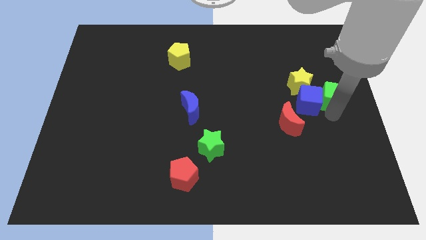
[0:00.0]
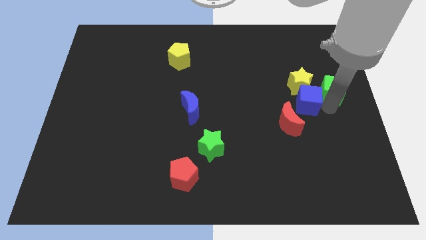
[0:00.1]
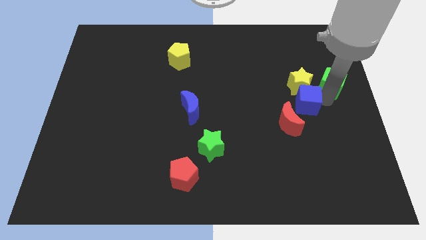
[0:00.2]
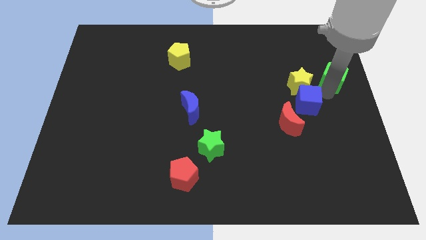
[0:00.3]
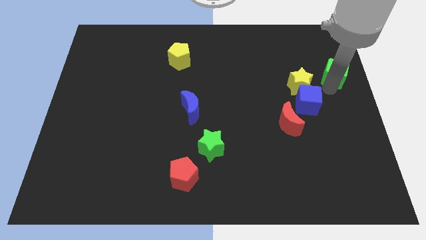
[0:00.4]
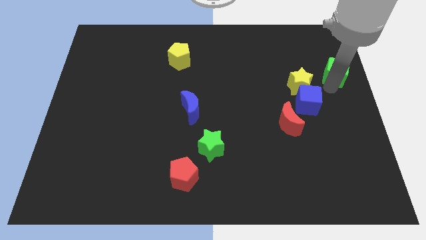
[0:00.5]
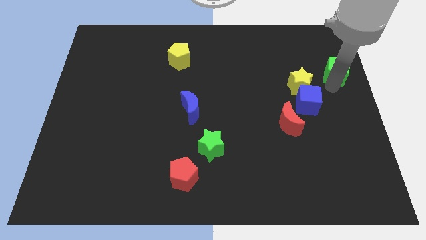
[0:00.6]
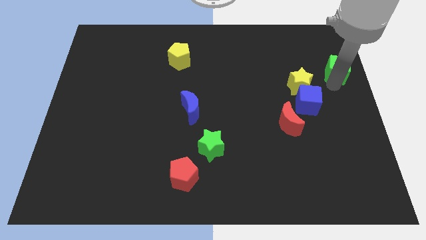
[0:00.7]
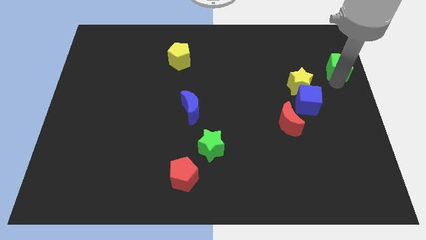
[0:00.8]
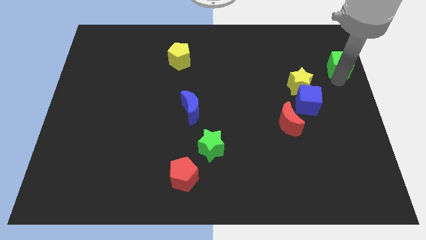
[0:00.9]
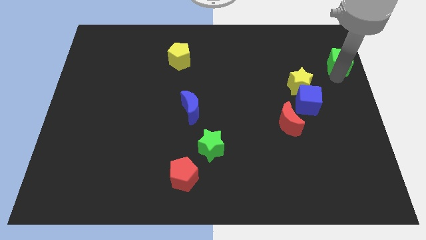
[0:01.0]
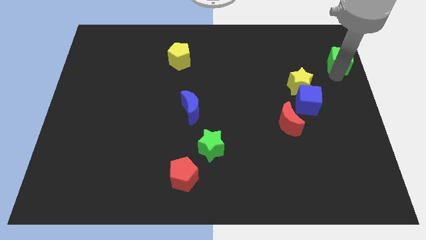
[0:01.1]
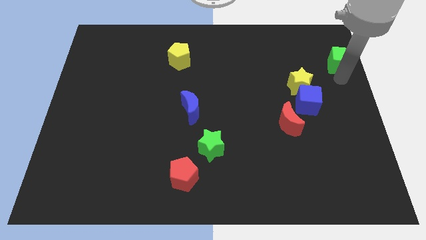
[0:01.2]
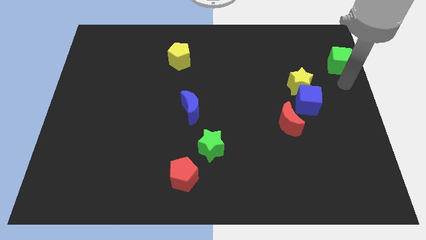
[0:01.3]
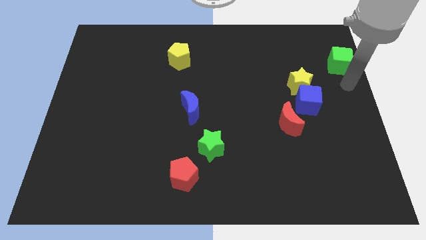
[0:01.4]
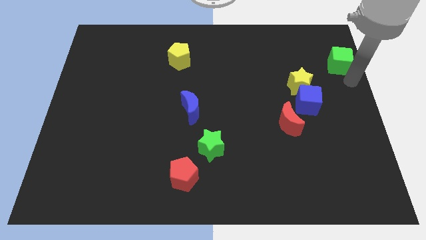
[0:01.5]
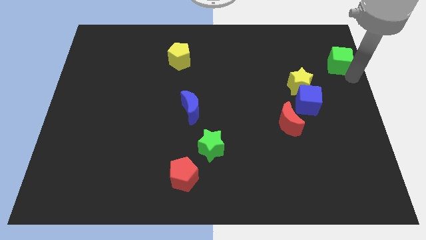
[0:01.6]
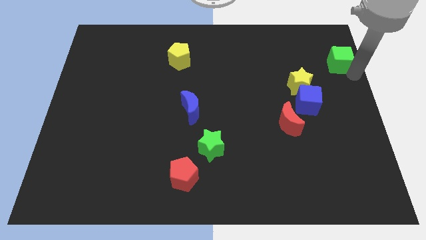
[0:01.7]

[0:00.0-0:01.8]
move the green cube towards the top right of the board

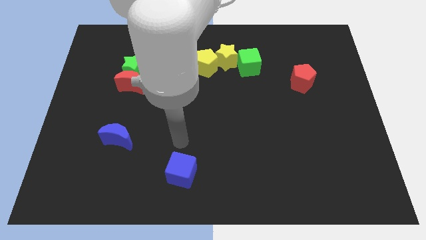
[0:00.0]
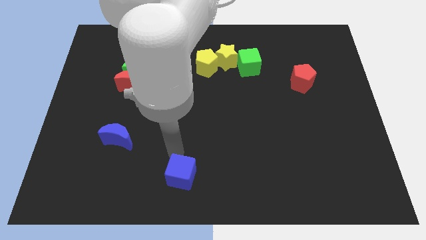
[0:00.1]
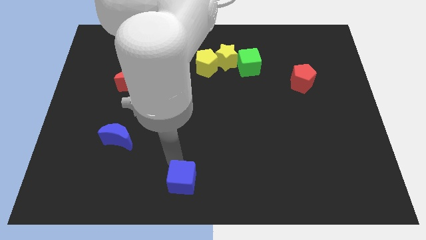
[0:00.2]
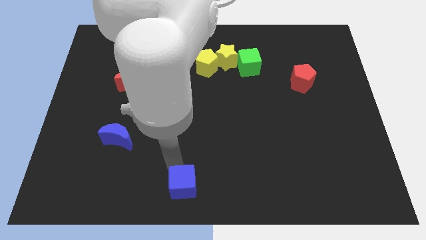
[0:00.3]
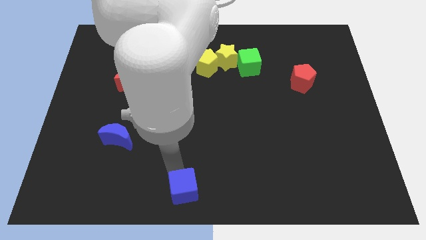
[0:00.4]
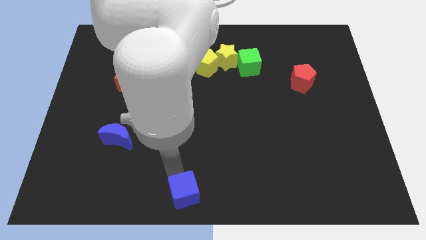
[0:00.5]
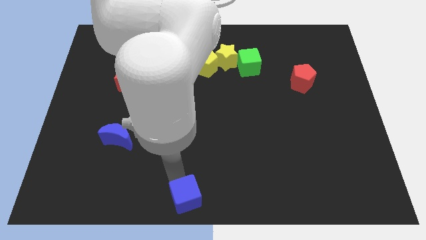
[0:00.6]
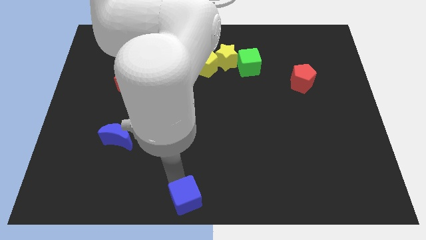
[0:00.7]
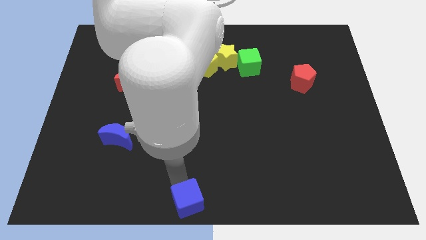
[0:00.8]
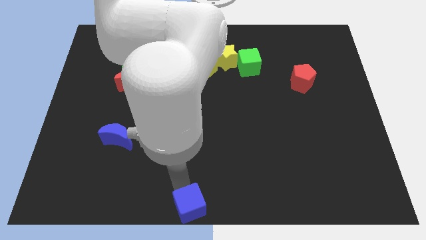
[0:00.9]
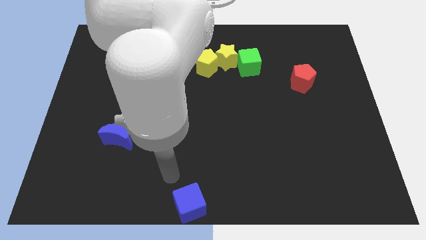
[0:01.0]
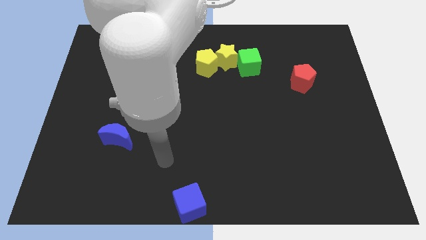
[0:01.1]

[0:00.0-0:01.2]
push the blue cube to the bottom center of the board

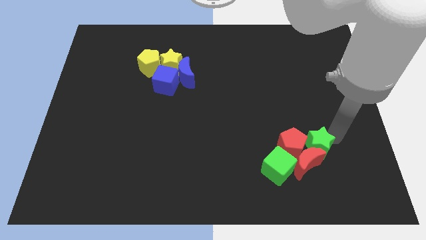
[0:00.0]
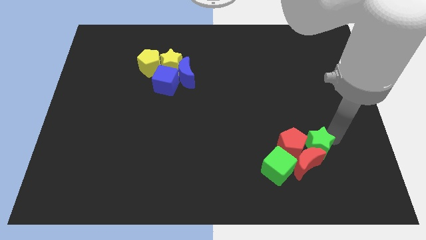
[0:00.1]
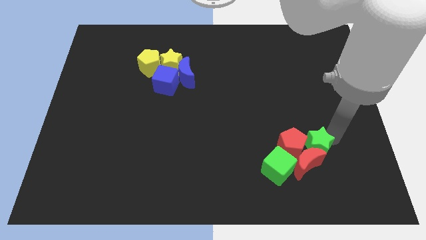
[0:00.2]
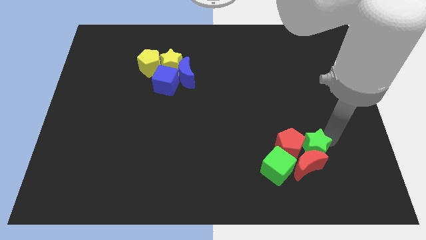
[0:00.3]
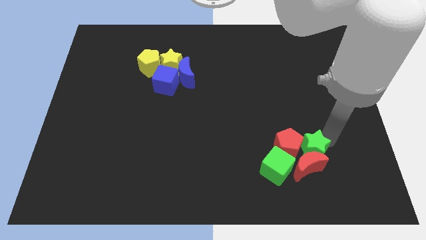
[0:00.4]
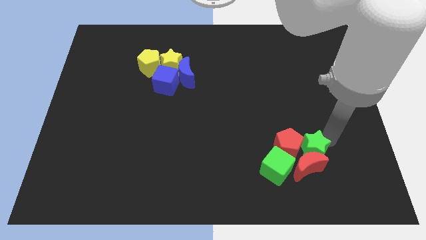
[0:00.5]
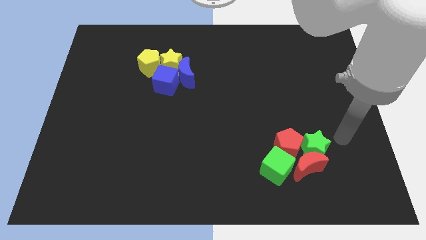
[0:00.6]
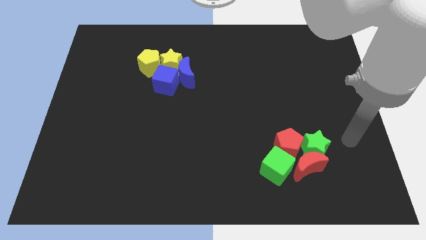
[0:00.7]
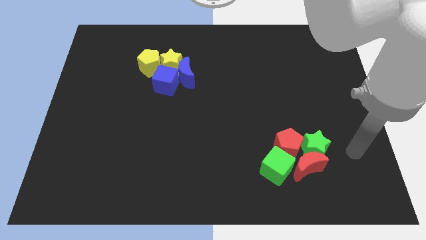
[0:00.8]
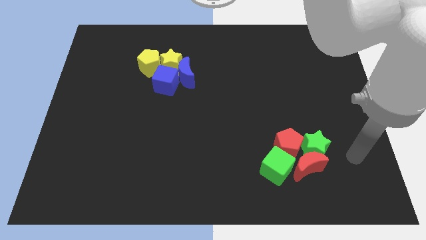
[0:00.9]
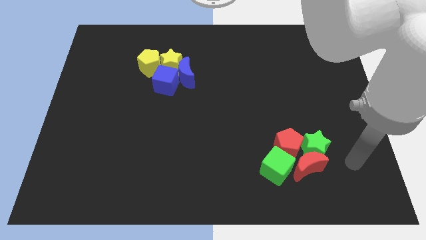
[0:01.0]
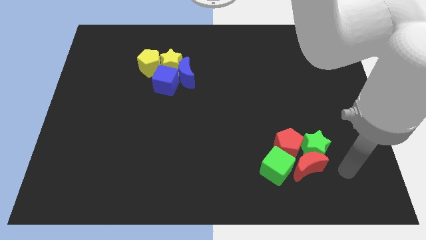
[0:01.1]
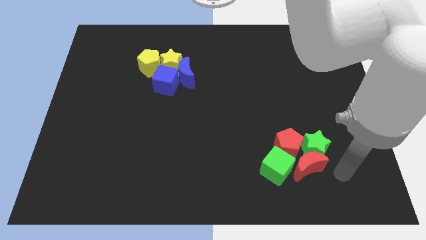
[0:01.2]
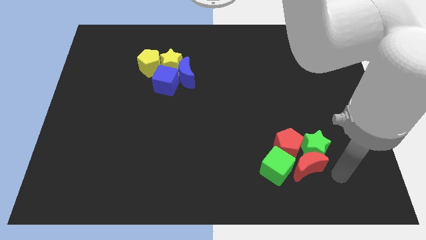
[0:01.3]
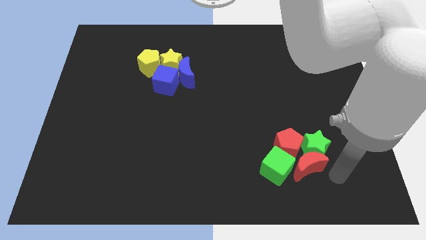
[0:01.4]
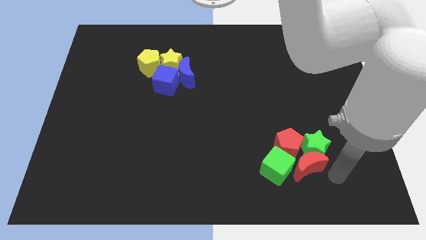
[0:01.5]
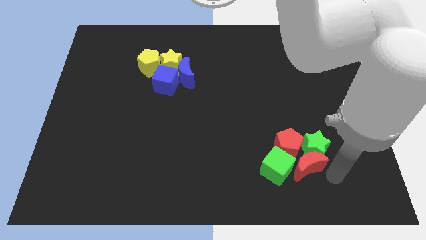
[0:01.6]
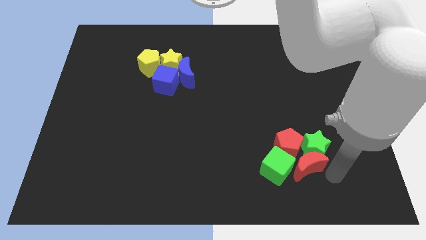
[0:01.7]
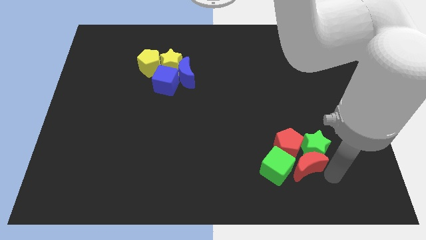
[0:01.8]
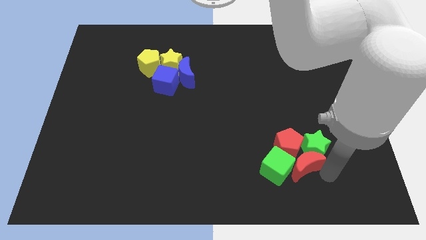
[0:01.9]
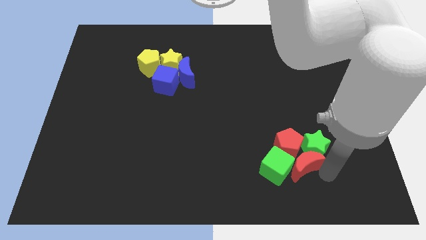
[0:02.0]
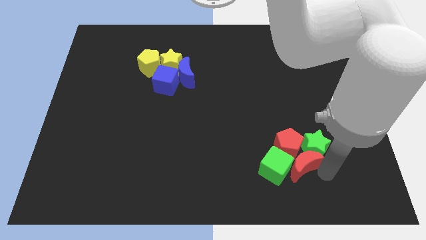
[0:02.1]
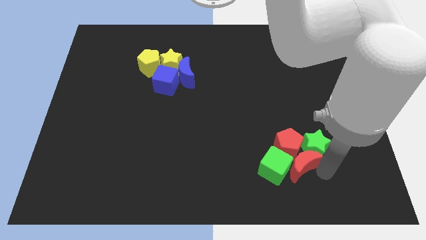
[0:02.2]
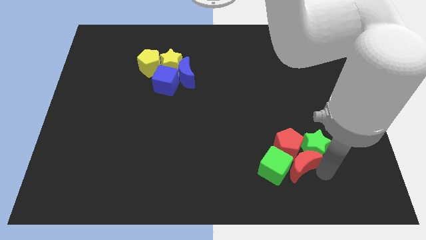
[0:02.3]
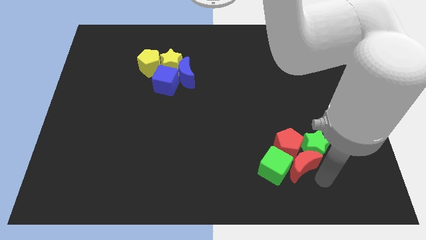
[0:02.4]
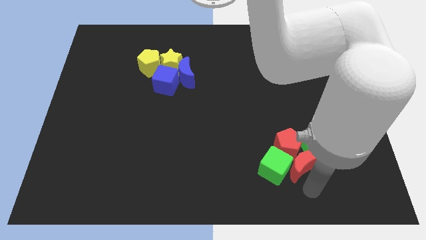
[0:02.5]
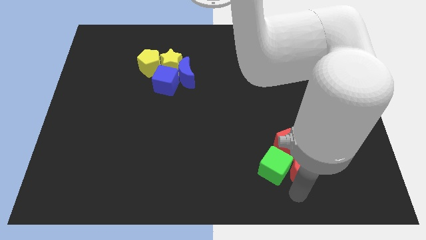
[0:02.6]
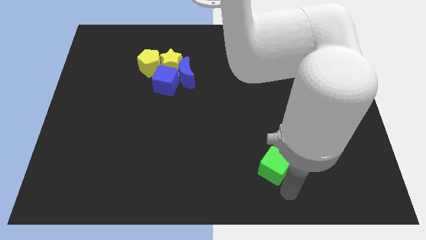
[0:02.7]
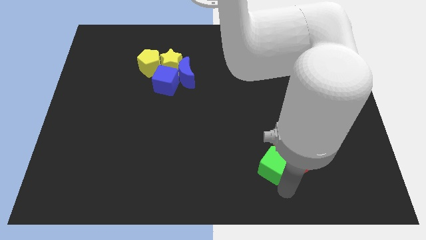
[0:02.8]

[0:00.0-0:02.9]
adjust the red crescent slightly into the group touching the green cube

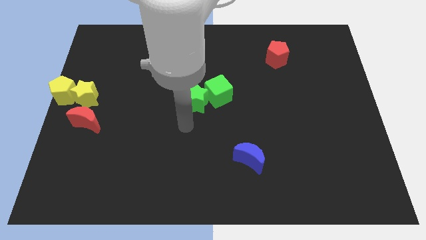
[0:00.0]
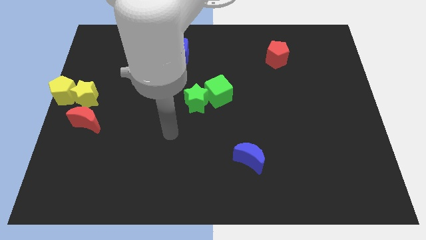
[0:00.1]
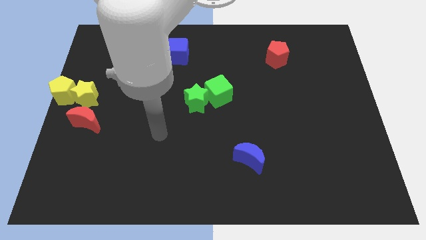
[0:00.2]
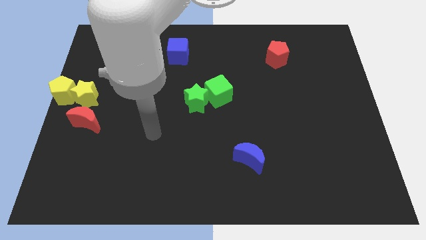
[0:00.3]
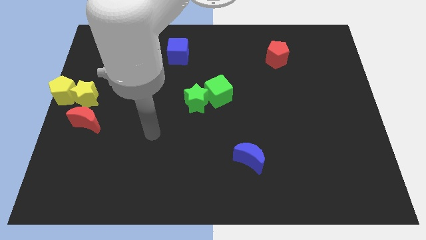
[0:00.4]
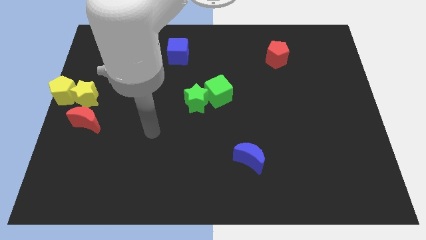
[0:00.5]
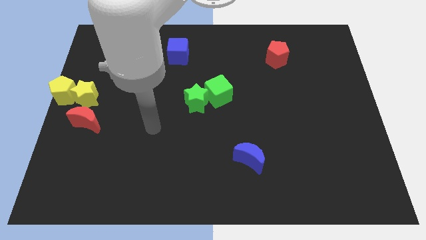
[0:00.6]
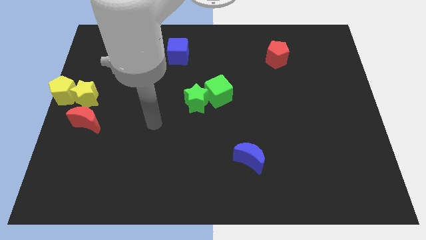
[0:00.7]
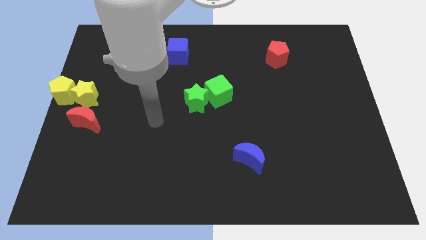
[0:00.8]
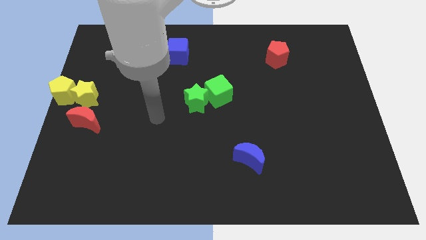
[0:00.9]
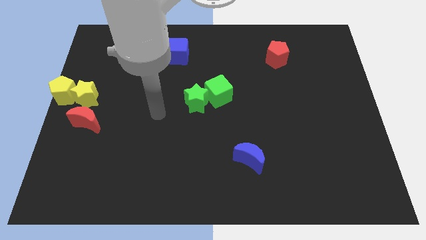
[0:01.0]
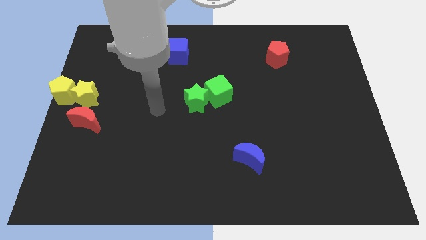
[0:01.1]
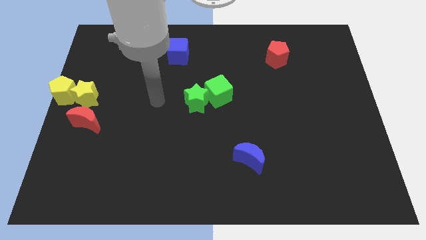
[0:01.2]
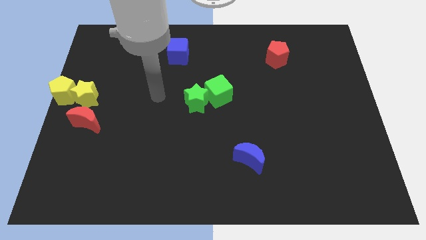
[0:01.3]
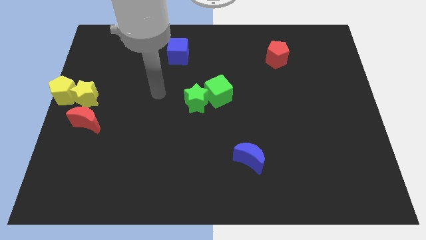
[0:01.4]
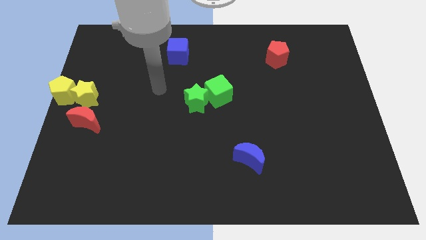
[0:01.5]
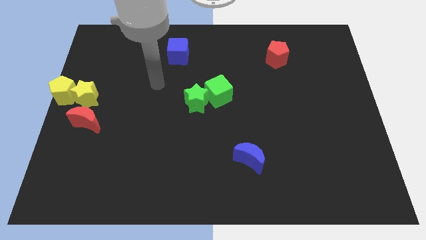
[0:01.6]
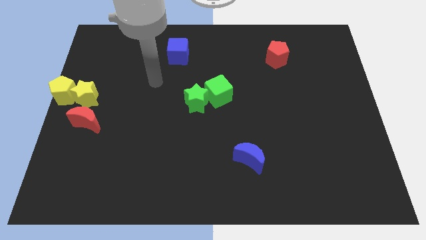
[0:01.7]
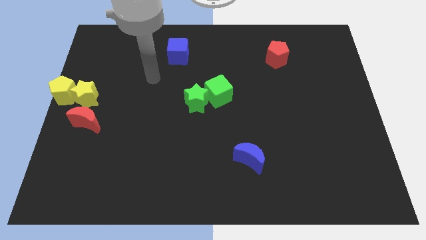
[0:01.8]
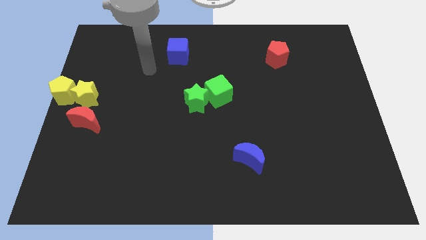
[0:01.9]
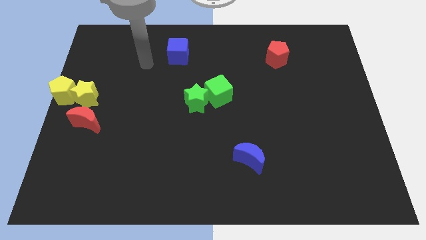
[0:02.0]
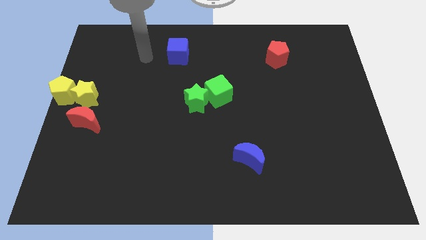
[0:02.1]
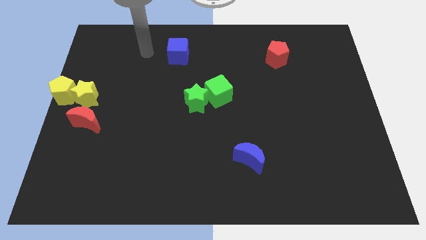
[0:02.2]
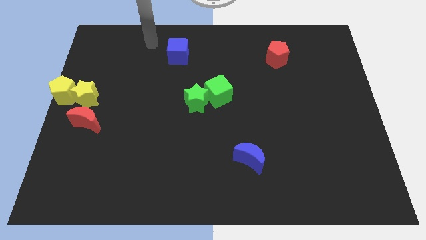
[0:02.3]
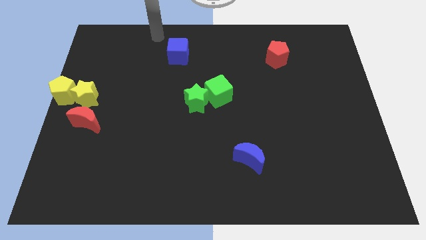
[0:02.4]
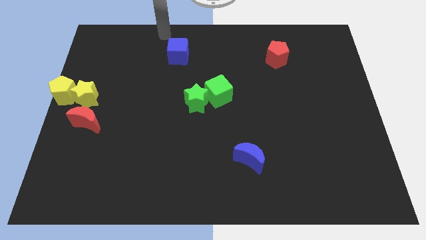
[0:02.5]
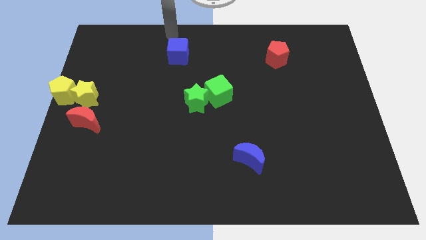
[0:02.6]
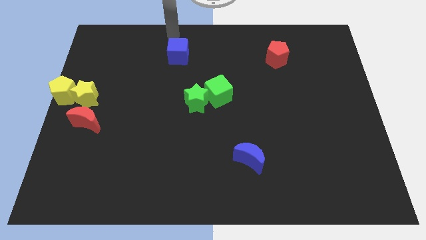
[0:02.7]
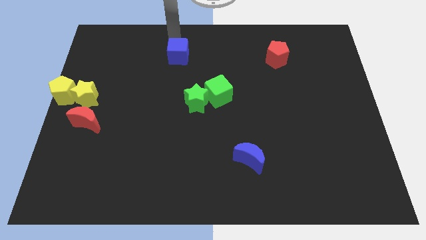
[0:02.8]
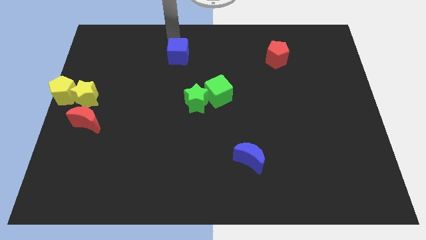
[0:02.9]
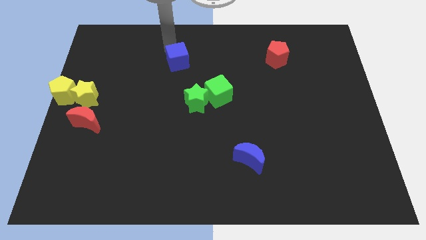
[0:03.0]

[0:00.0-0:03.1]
move your arm and point on top of blue cube
